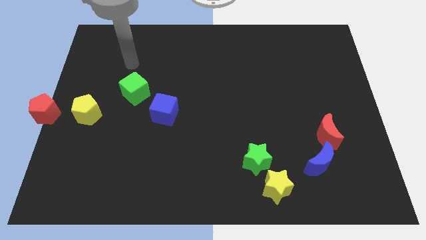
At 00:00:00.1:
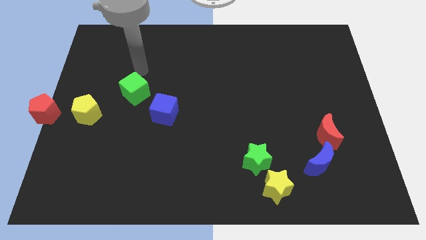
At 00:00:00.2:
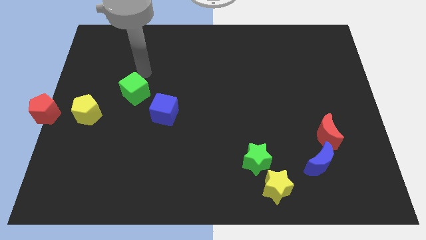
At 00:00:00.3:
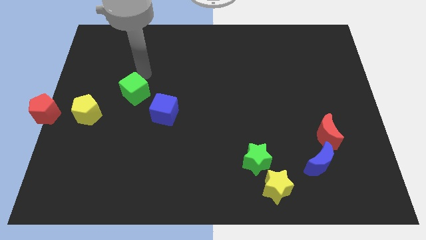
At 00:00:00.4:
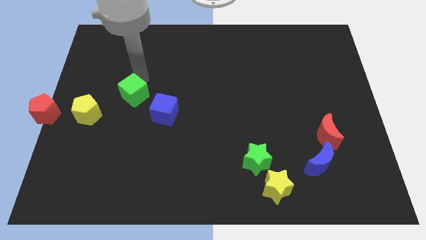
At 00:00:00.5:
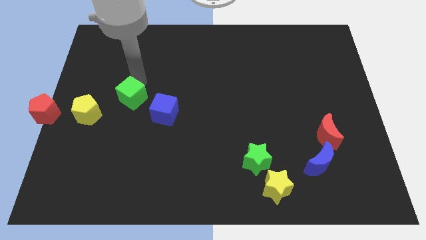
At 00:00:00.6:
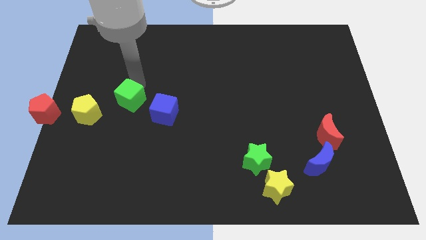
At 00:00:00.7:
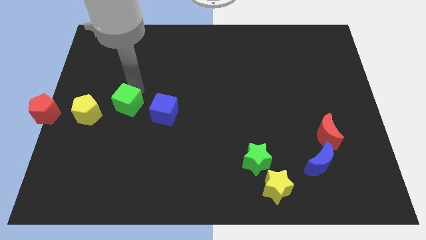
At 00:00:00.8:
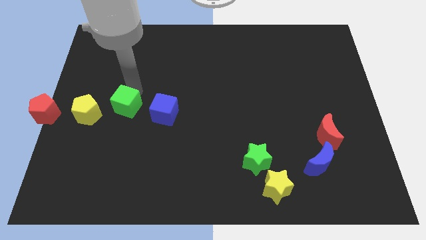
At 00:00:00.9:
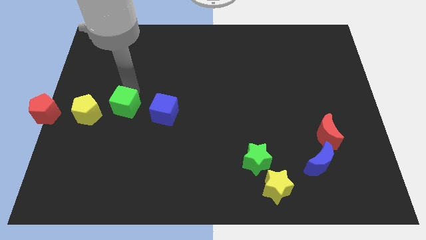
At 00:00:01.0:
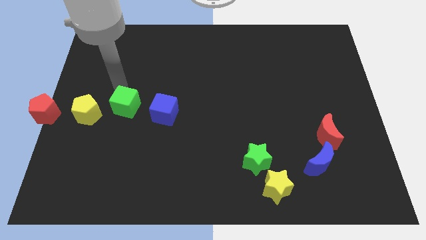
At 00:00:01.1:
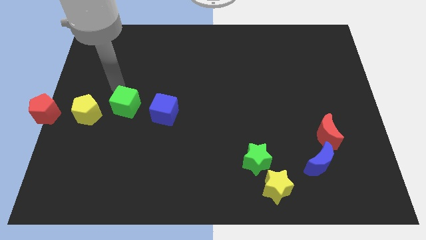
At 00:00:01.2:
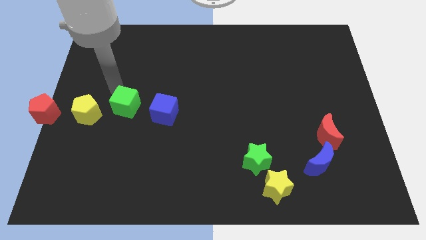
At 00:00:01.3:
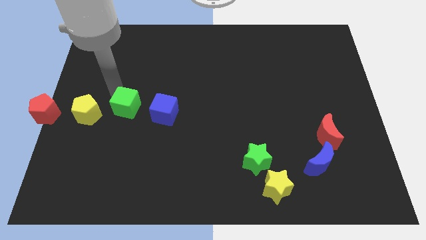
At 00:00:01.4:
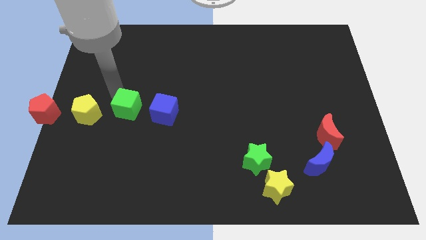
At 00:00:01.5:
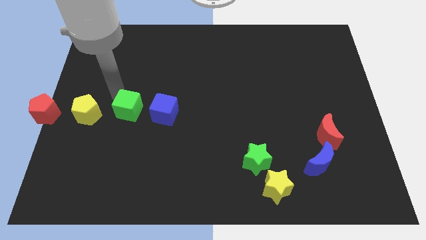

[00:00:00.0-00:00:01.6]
place the green cube between yellow pentagon and blue cube

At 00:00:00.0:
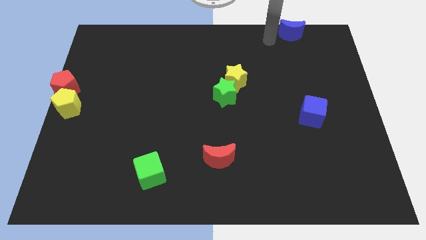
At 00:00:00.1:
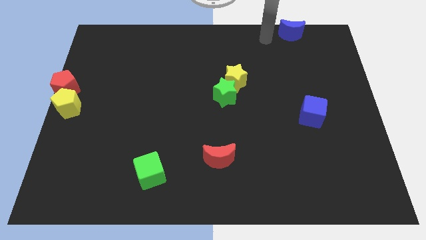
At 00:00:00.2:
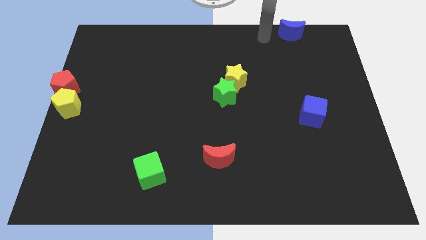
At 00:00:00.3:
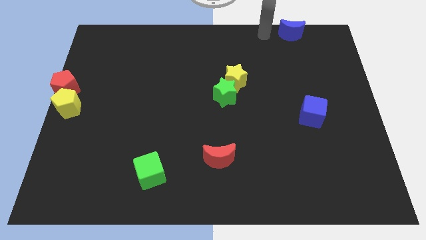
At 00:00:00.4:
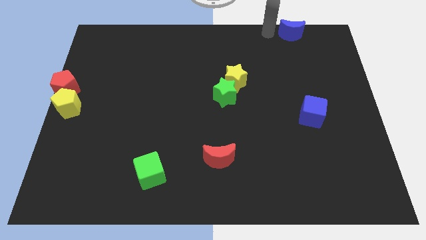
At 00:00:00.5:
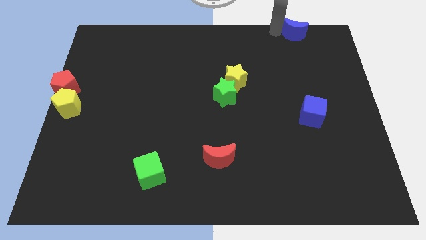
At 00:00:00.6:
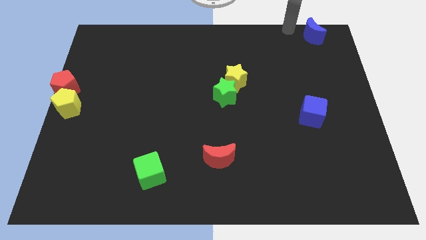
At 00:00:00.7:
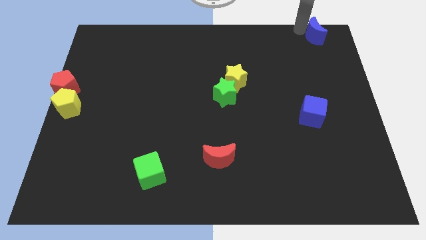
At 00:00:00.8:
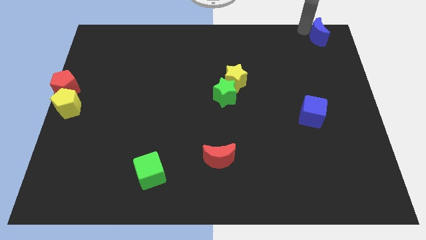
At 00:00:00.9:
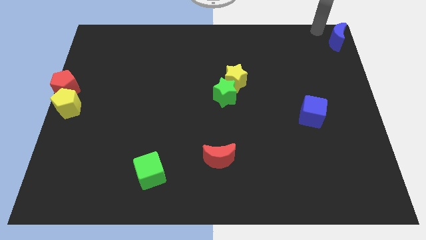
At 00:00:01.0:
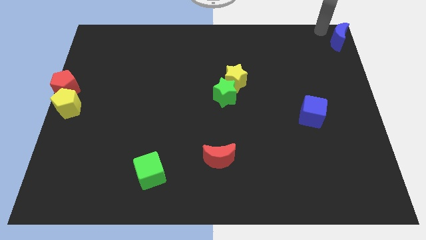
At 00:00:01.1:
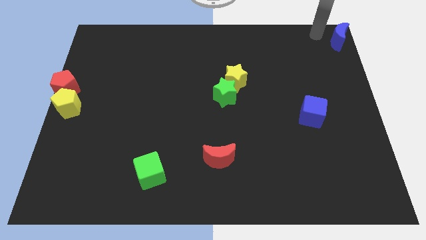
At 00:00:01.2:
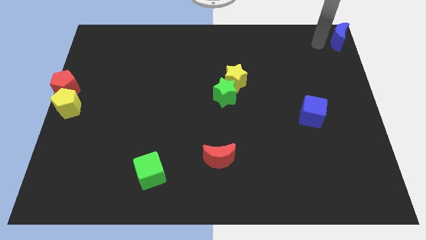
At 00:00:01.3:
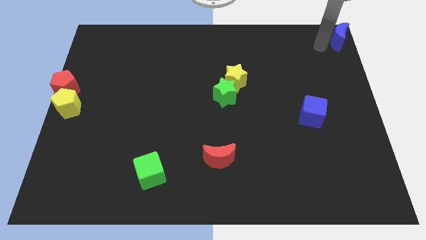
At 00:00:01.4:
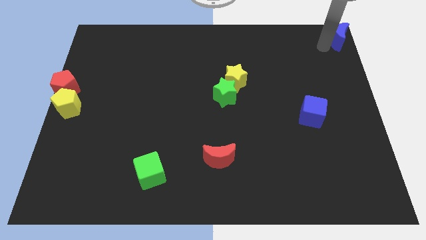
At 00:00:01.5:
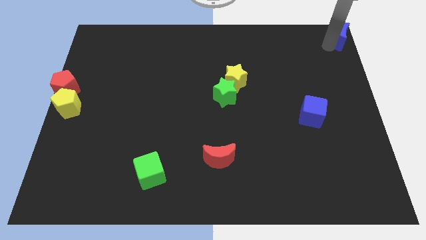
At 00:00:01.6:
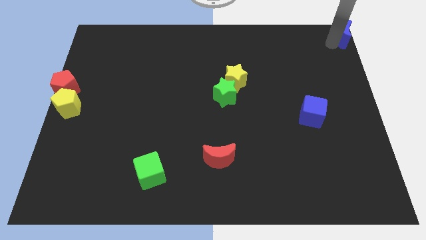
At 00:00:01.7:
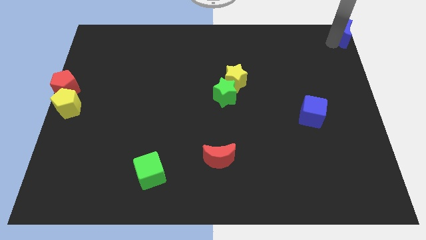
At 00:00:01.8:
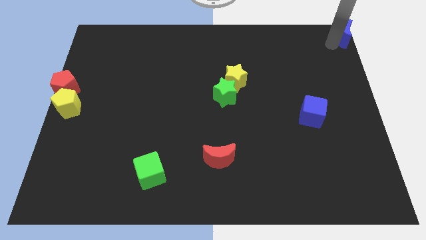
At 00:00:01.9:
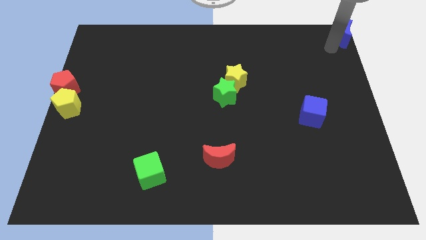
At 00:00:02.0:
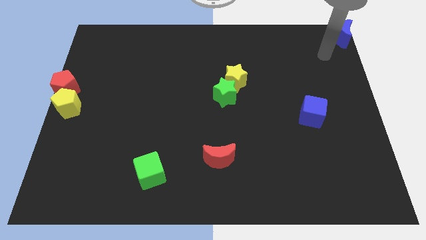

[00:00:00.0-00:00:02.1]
move blue moon to the top left corner

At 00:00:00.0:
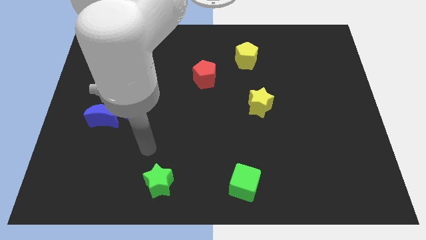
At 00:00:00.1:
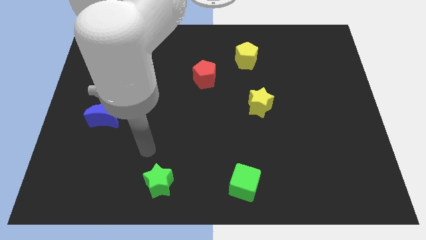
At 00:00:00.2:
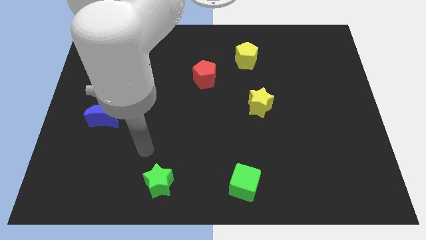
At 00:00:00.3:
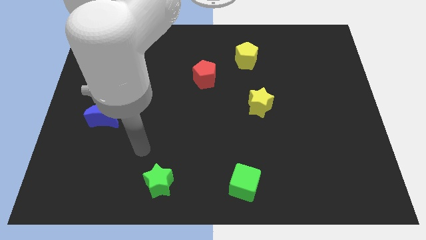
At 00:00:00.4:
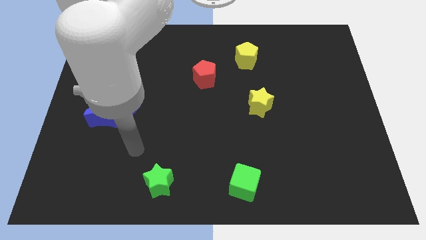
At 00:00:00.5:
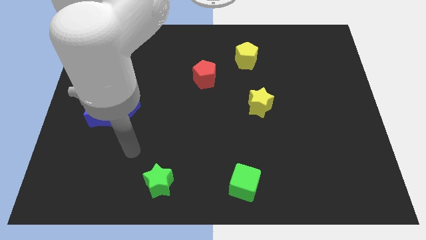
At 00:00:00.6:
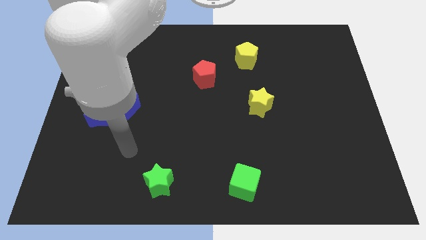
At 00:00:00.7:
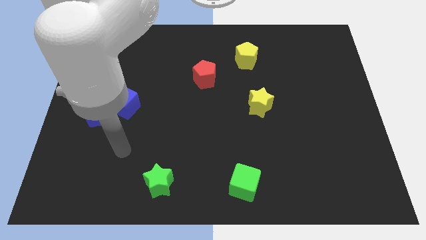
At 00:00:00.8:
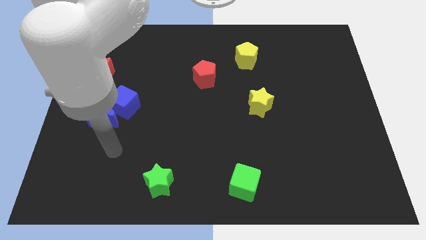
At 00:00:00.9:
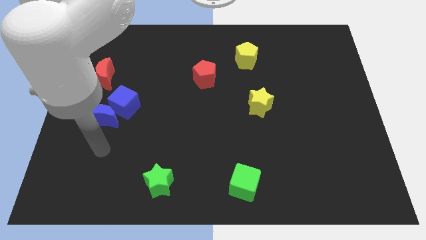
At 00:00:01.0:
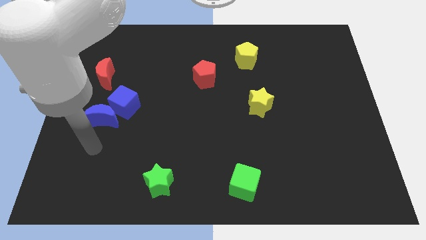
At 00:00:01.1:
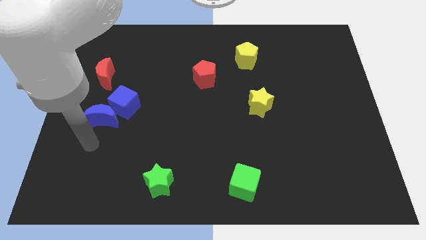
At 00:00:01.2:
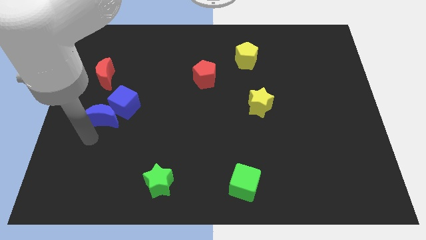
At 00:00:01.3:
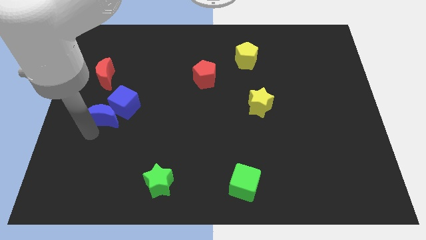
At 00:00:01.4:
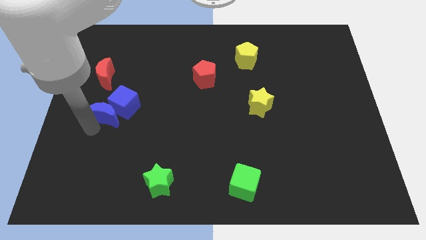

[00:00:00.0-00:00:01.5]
move your arm towards the blue crescent

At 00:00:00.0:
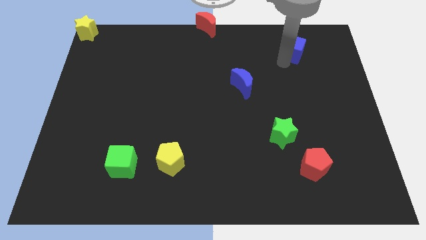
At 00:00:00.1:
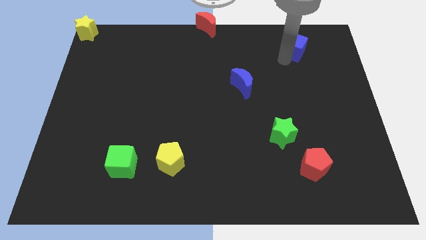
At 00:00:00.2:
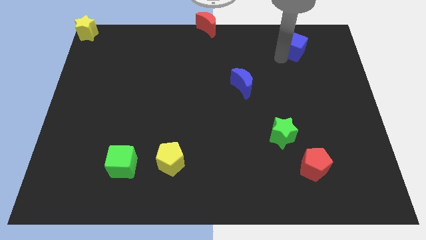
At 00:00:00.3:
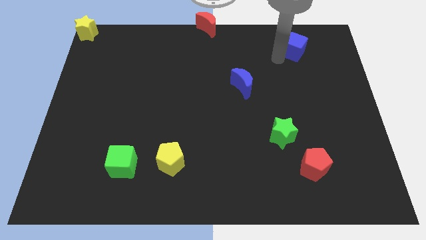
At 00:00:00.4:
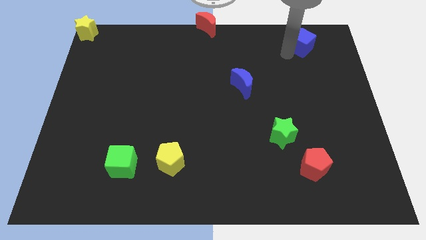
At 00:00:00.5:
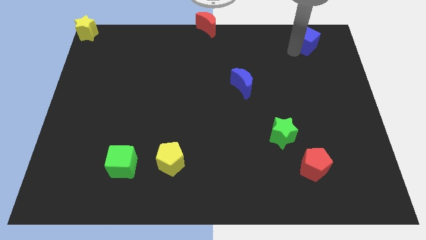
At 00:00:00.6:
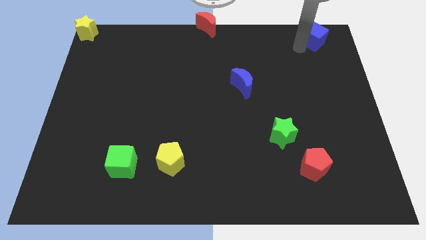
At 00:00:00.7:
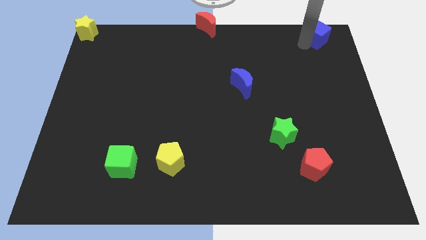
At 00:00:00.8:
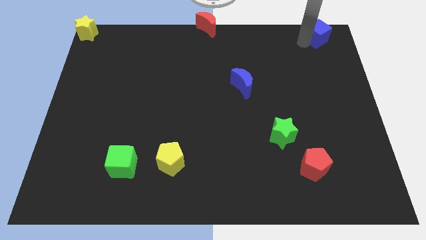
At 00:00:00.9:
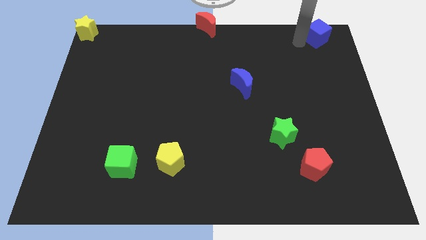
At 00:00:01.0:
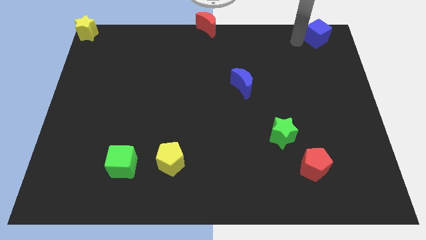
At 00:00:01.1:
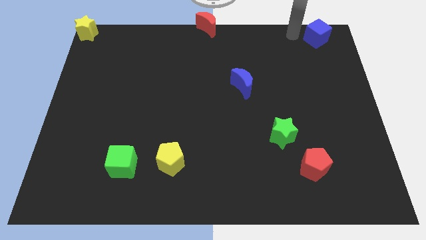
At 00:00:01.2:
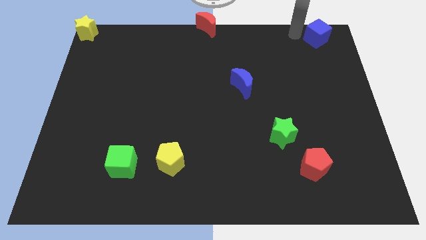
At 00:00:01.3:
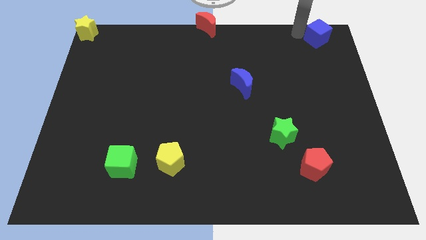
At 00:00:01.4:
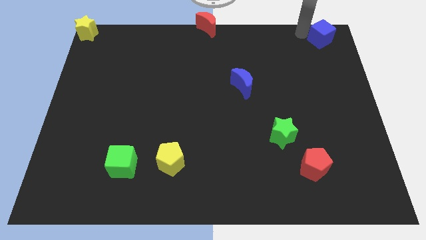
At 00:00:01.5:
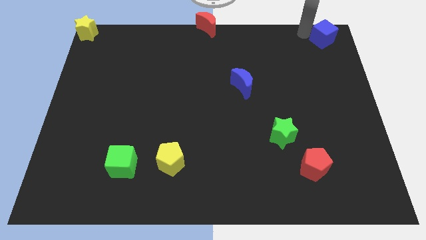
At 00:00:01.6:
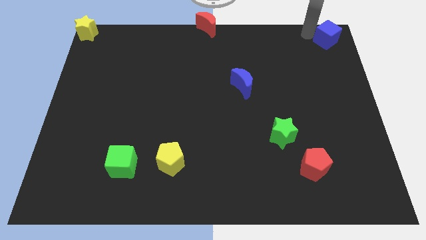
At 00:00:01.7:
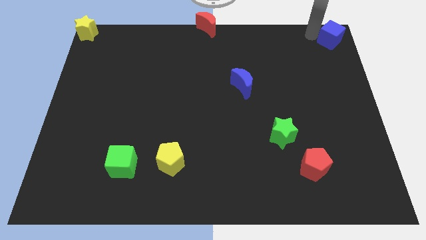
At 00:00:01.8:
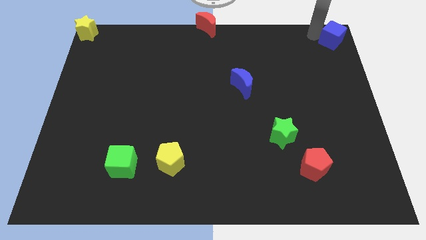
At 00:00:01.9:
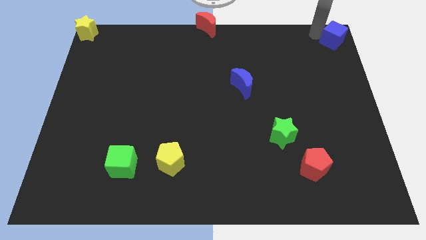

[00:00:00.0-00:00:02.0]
move the blue to the top right corner

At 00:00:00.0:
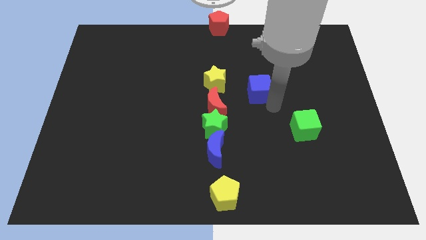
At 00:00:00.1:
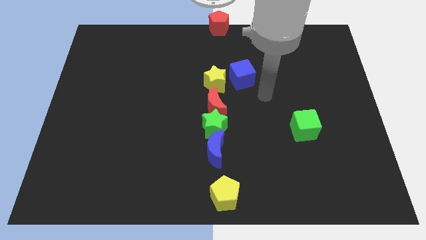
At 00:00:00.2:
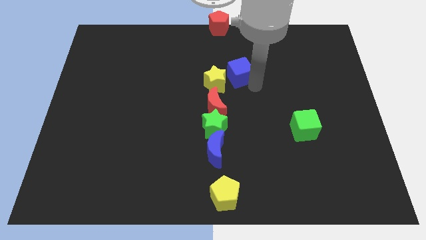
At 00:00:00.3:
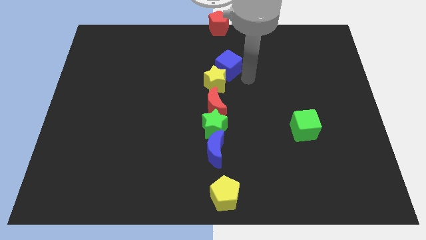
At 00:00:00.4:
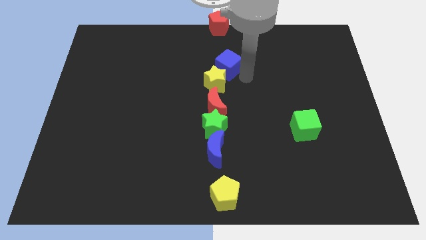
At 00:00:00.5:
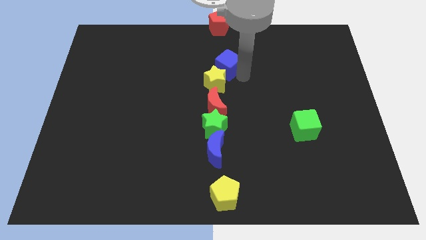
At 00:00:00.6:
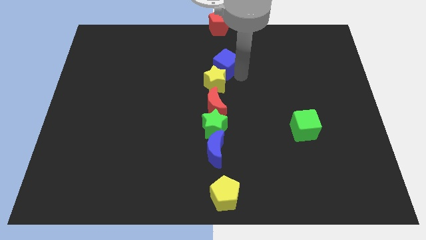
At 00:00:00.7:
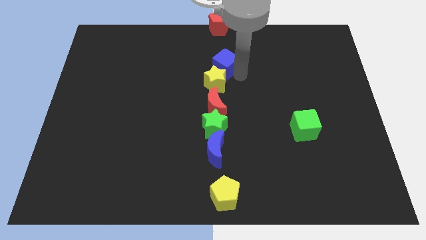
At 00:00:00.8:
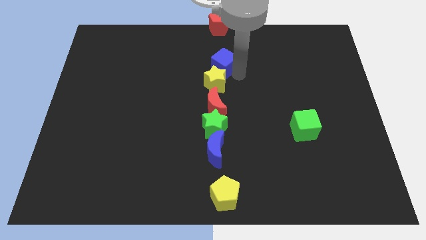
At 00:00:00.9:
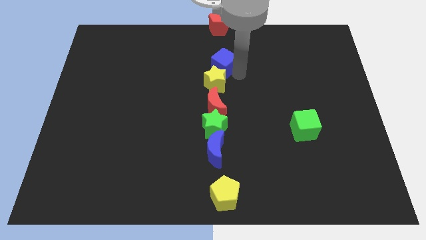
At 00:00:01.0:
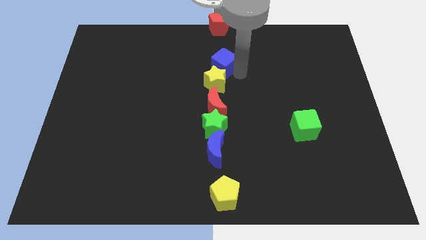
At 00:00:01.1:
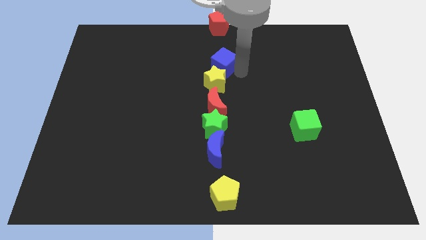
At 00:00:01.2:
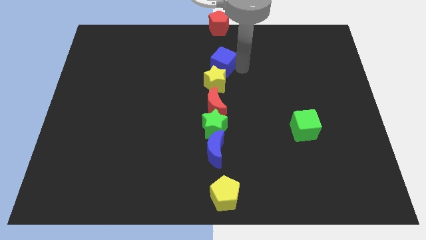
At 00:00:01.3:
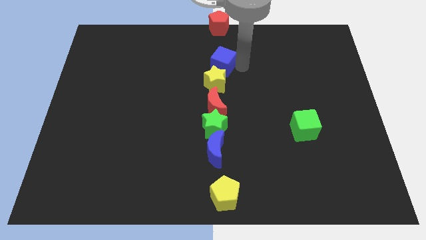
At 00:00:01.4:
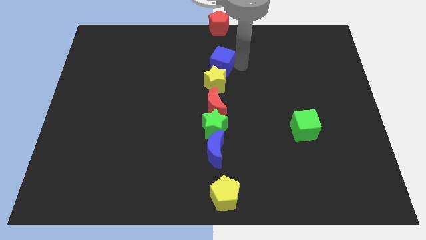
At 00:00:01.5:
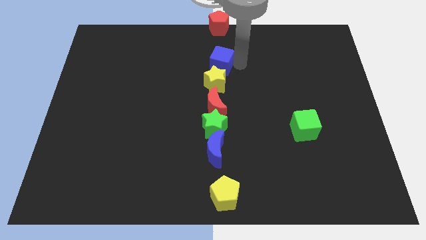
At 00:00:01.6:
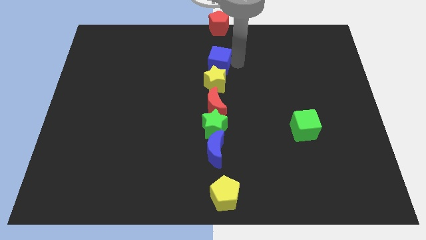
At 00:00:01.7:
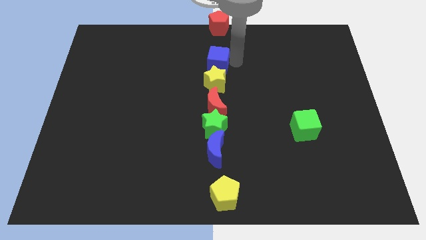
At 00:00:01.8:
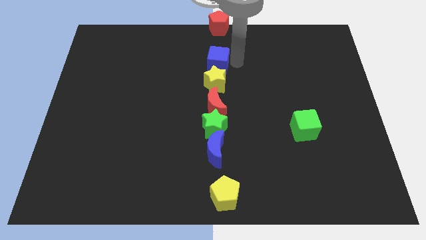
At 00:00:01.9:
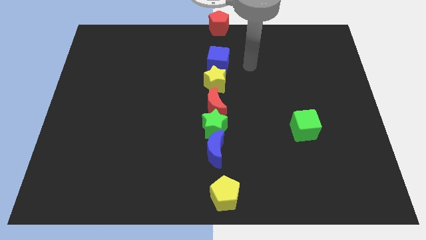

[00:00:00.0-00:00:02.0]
place a blue cube on top of the yellow star
